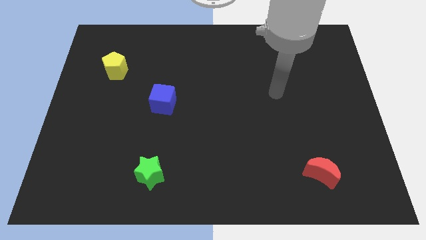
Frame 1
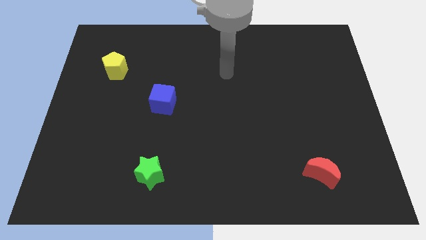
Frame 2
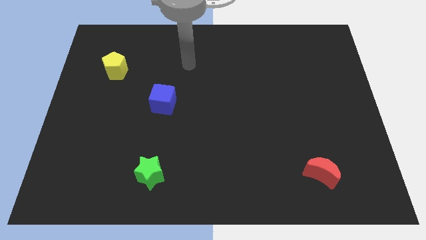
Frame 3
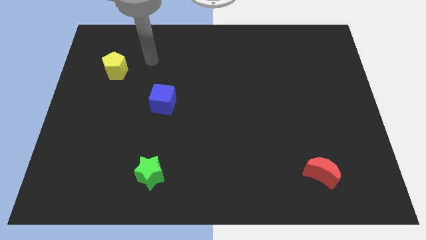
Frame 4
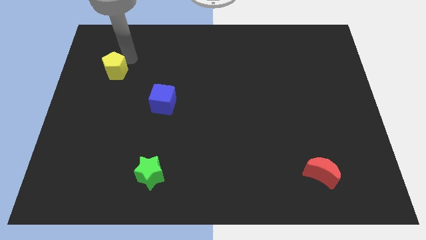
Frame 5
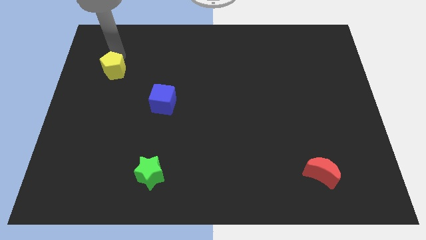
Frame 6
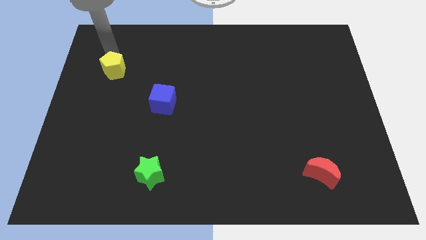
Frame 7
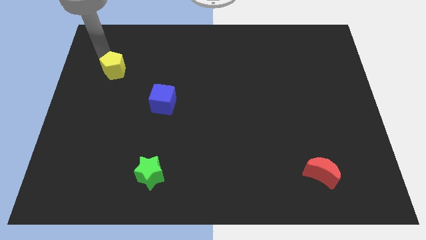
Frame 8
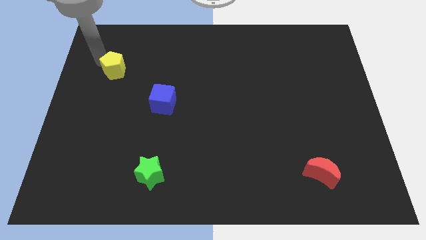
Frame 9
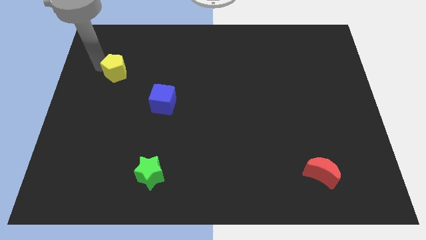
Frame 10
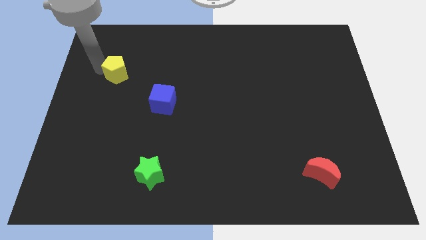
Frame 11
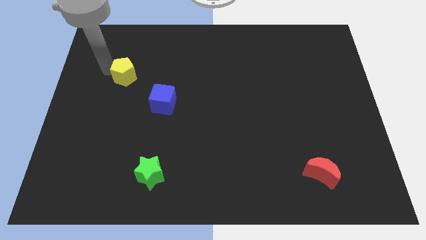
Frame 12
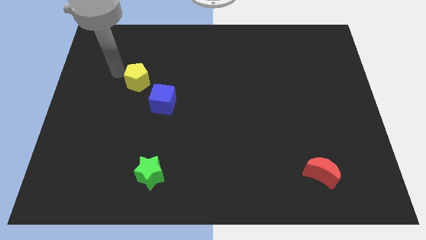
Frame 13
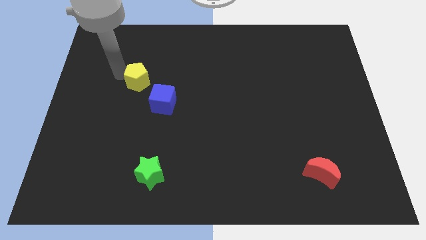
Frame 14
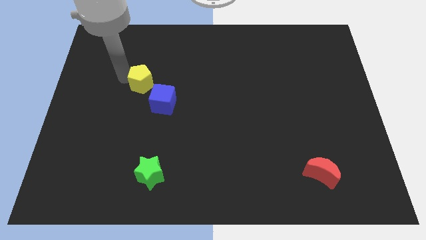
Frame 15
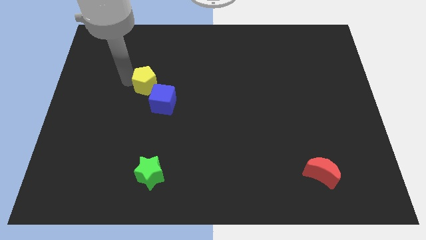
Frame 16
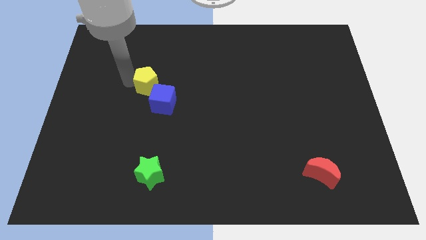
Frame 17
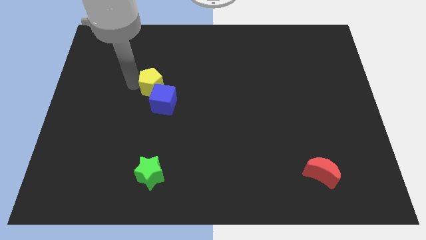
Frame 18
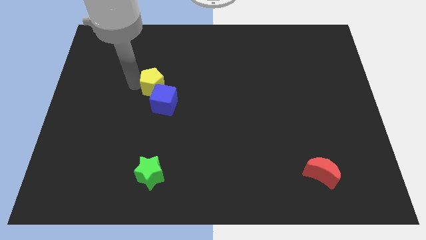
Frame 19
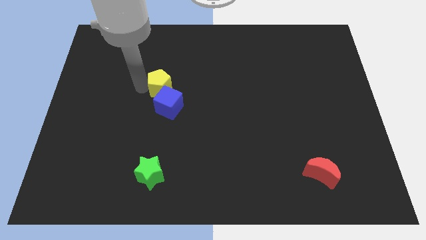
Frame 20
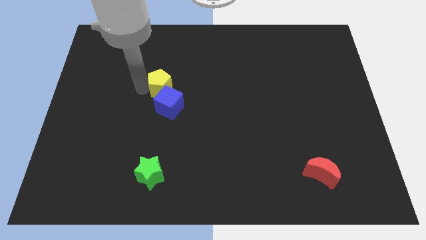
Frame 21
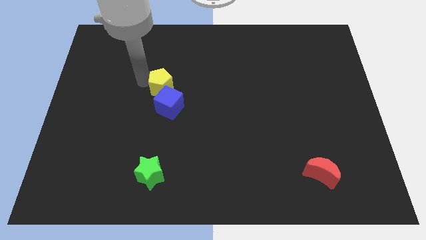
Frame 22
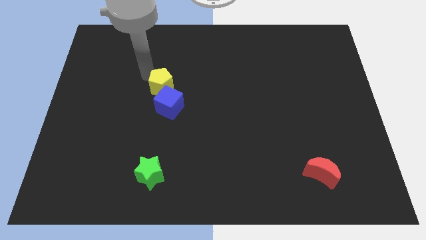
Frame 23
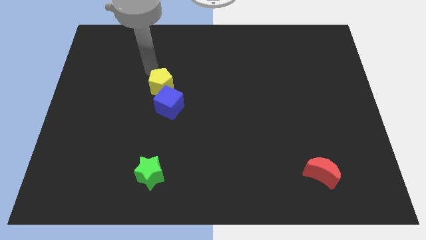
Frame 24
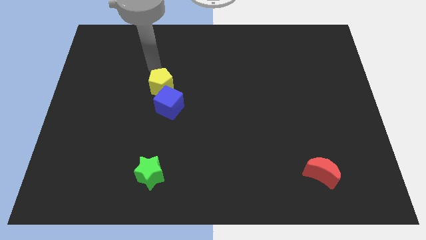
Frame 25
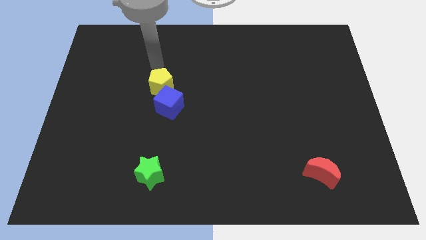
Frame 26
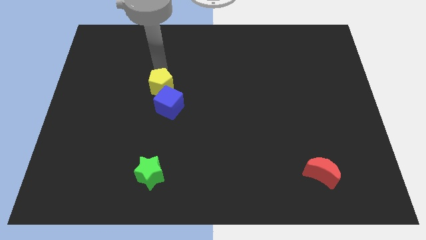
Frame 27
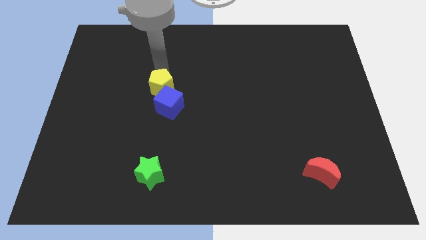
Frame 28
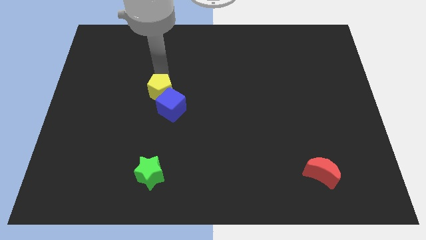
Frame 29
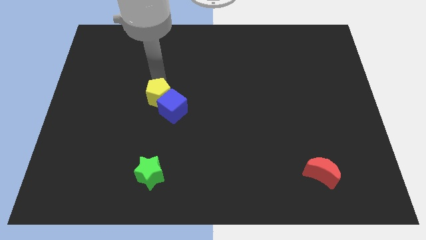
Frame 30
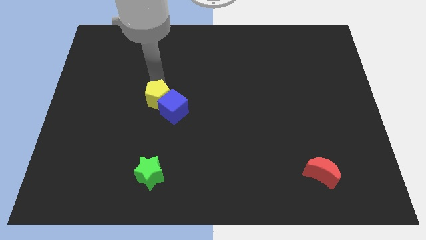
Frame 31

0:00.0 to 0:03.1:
slide the pentagon to the blue block

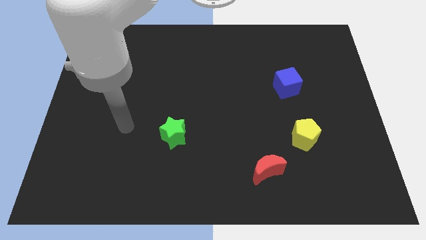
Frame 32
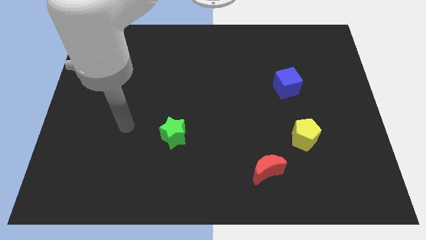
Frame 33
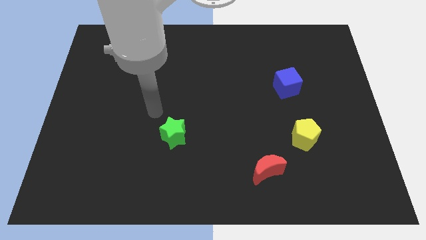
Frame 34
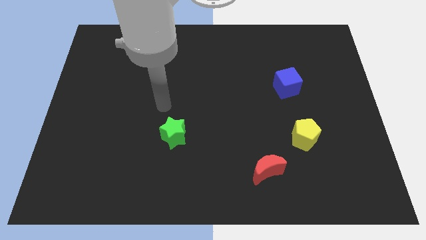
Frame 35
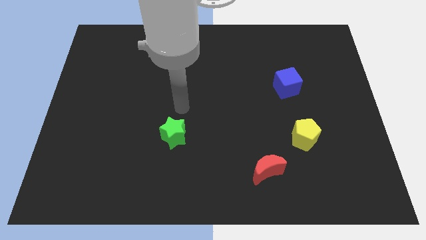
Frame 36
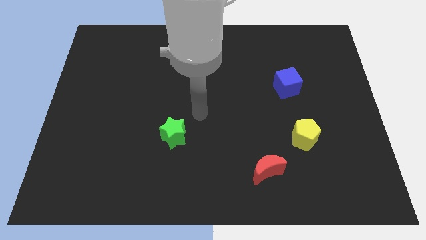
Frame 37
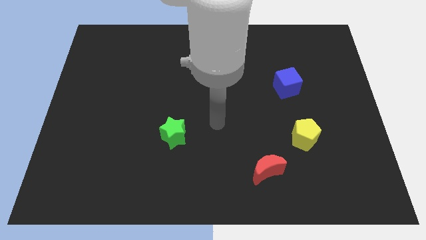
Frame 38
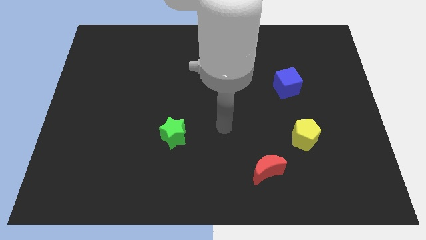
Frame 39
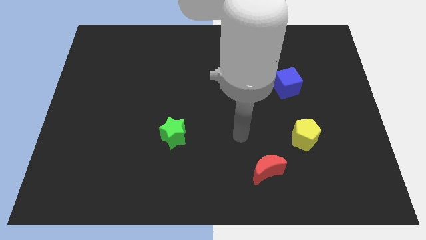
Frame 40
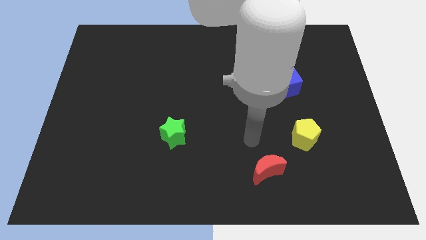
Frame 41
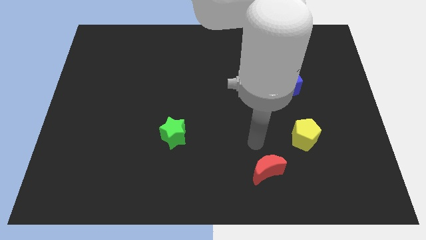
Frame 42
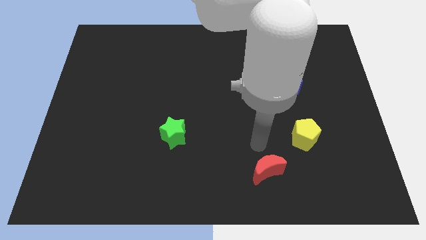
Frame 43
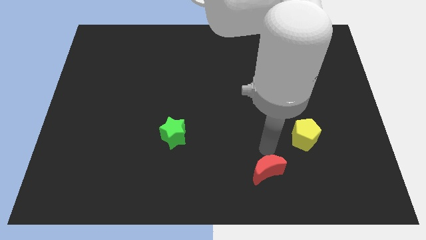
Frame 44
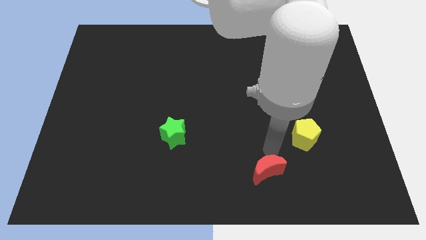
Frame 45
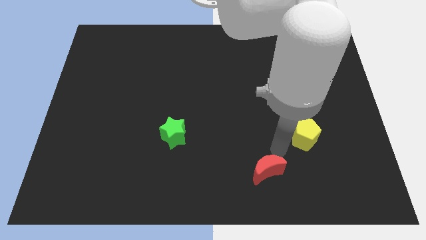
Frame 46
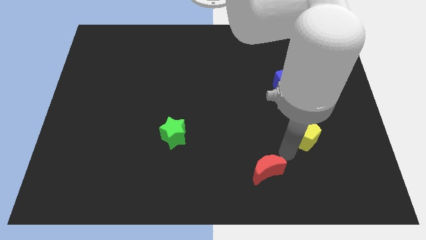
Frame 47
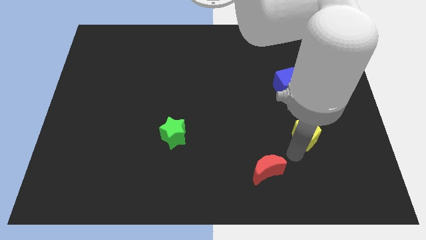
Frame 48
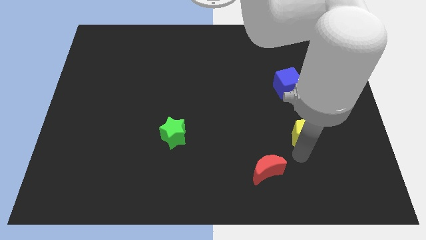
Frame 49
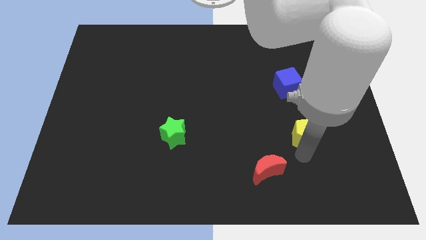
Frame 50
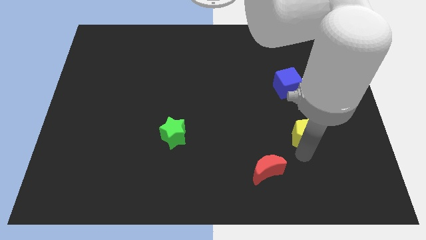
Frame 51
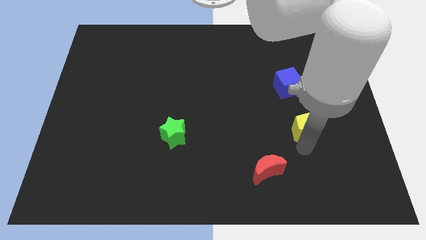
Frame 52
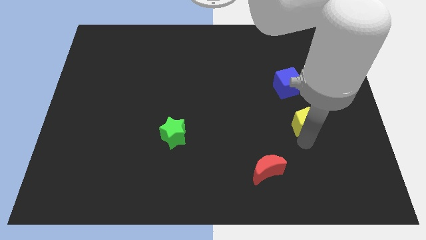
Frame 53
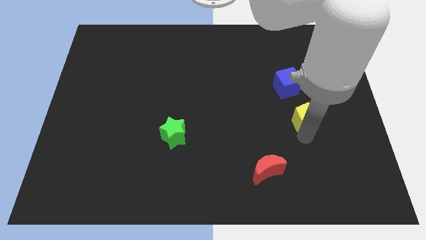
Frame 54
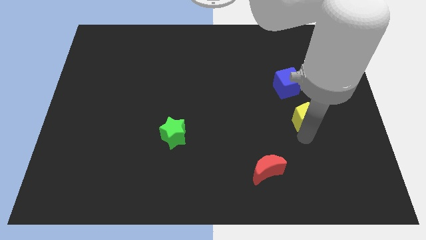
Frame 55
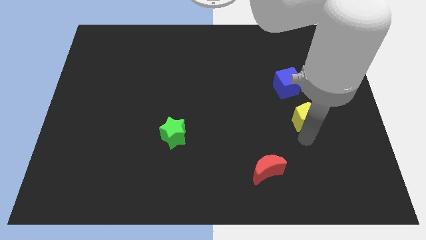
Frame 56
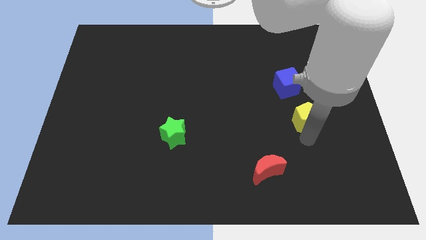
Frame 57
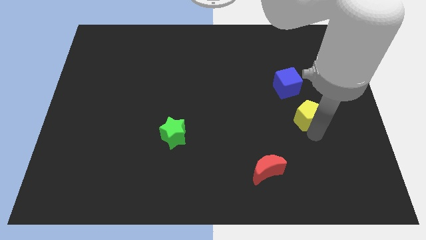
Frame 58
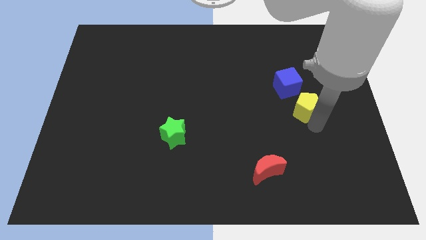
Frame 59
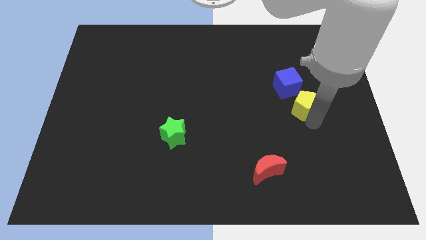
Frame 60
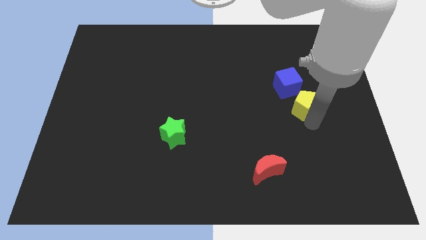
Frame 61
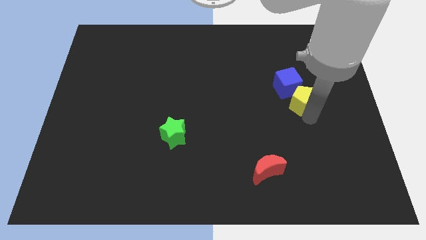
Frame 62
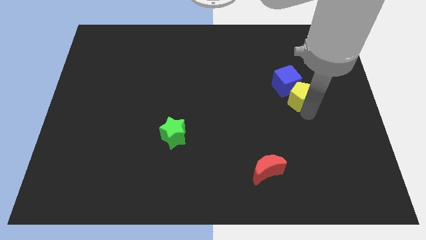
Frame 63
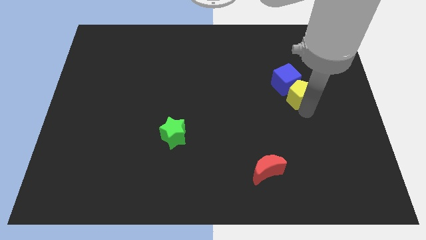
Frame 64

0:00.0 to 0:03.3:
put the yellow block close to the blue block

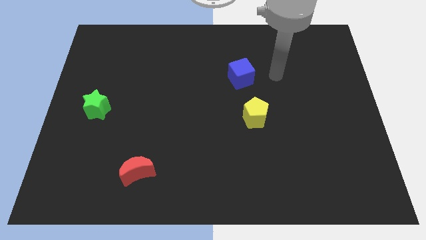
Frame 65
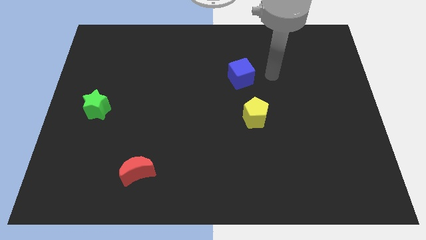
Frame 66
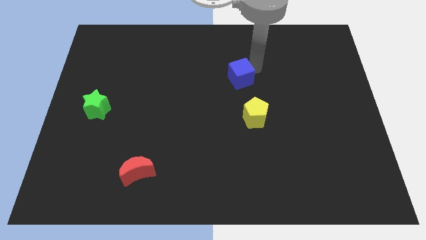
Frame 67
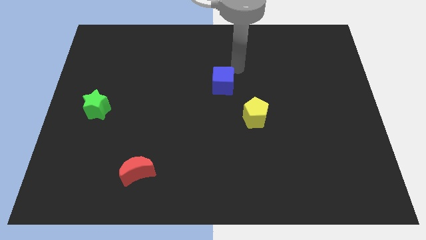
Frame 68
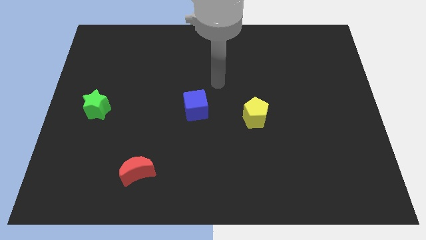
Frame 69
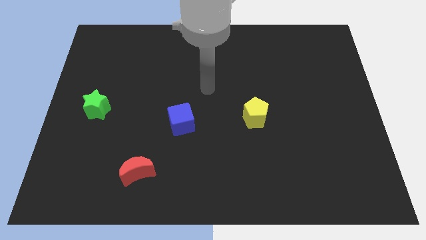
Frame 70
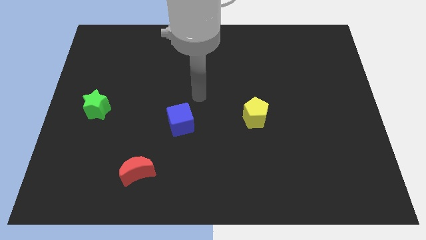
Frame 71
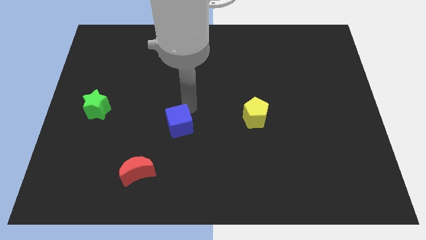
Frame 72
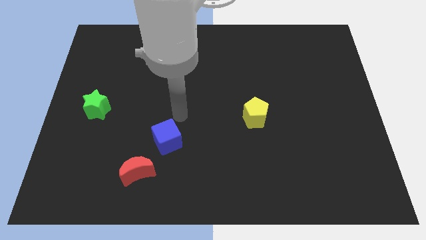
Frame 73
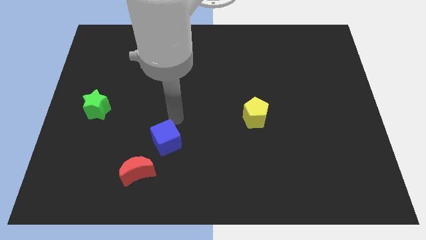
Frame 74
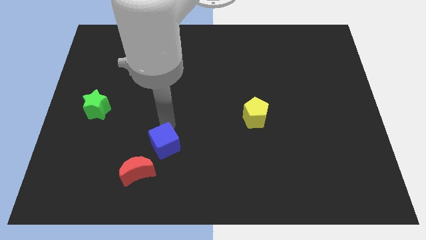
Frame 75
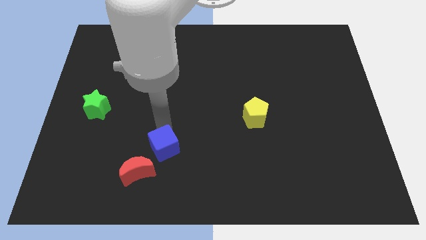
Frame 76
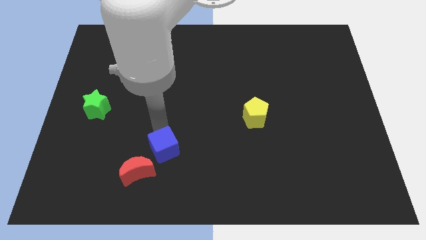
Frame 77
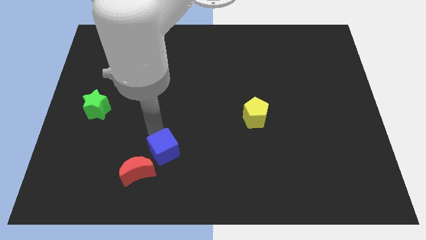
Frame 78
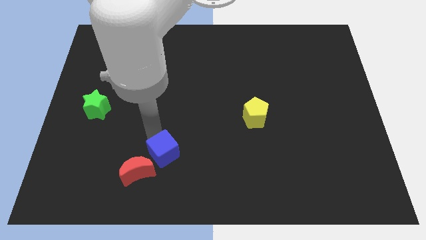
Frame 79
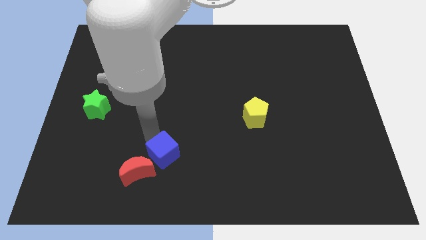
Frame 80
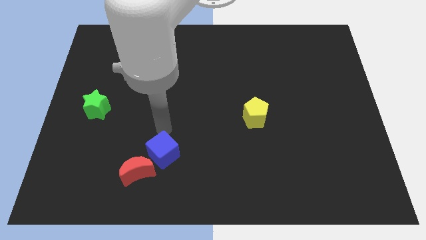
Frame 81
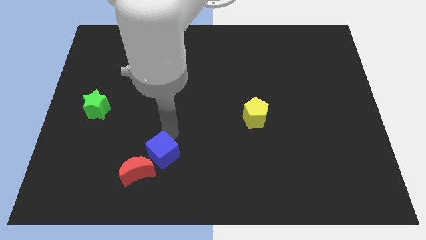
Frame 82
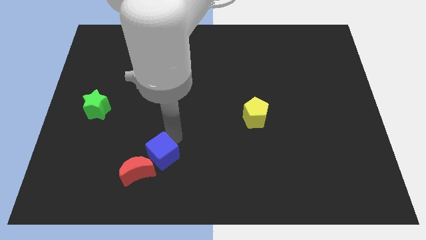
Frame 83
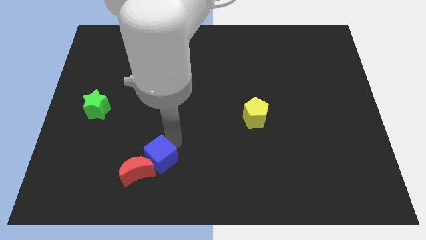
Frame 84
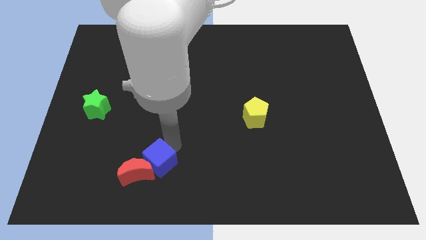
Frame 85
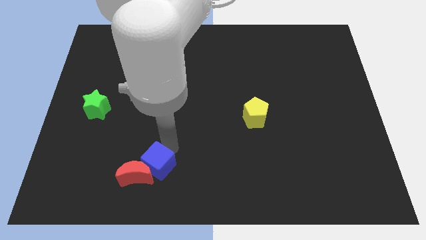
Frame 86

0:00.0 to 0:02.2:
move the cube to the moon

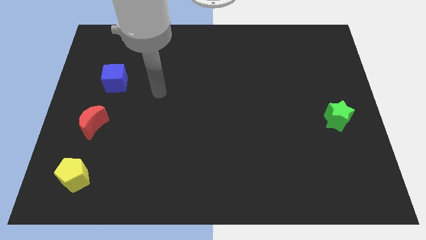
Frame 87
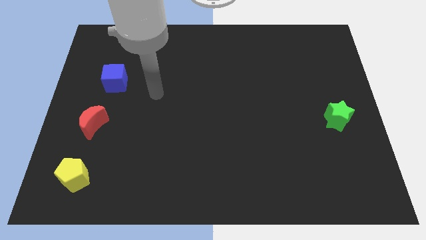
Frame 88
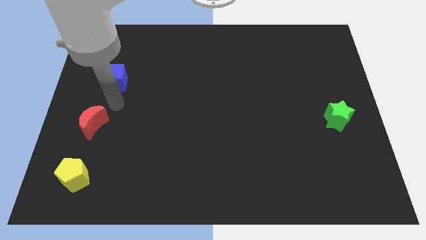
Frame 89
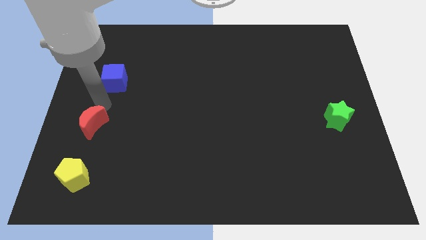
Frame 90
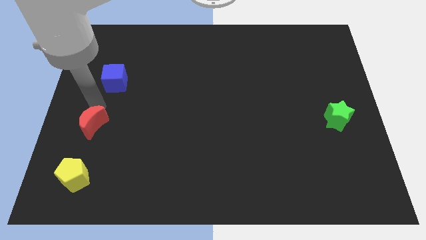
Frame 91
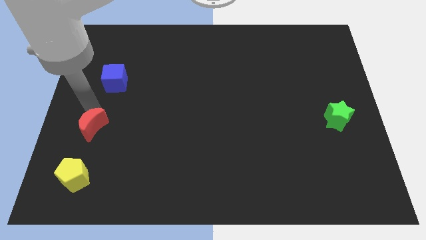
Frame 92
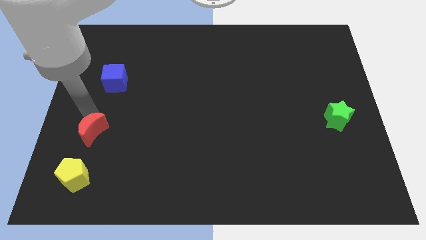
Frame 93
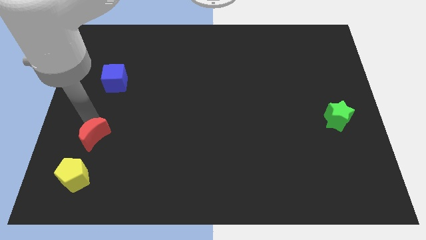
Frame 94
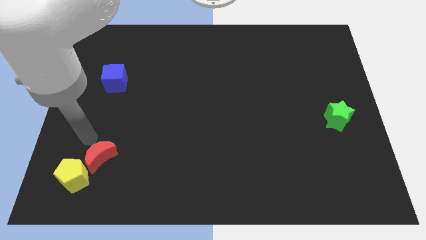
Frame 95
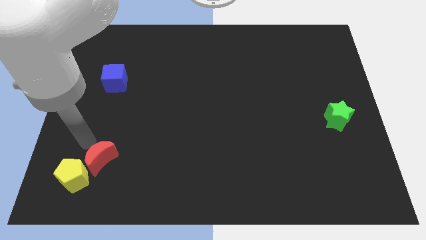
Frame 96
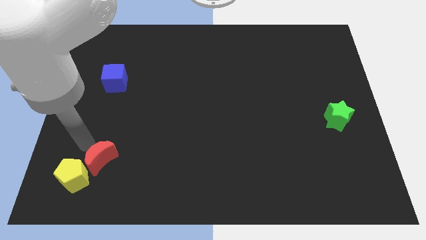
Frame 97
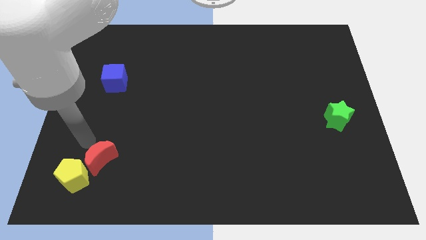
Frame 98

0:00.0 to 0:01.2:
push the red block next to the yellow pentagon
